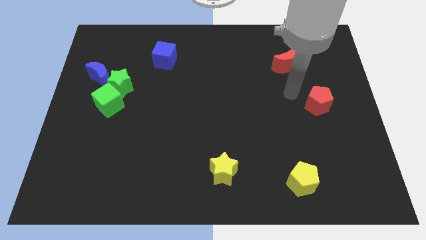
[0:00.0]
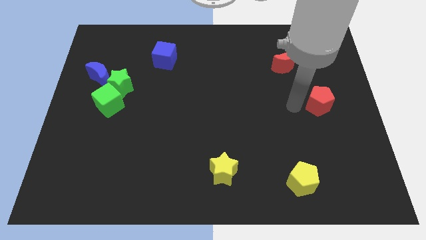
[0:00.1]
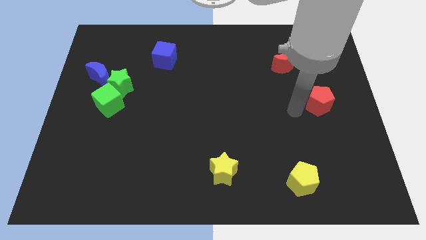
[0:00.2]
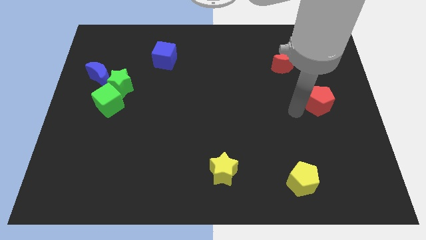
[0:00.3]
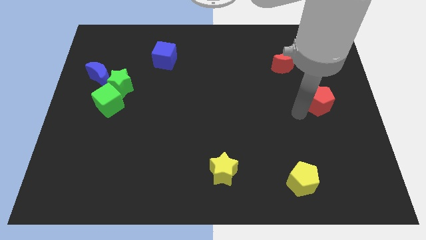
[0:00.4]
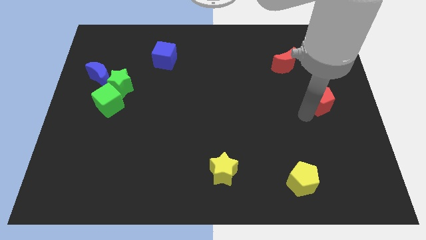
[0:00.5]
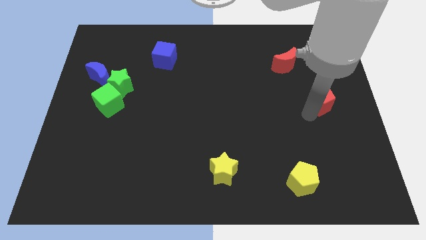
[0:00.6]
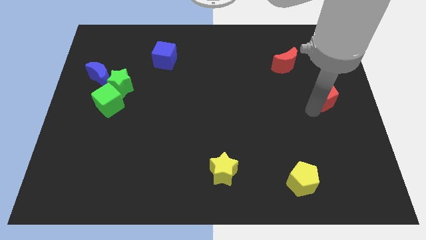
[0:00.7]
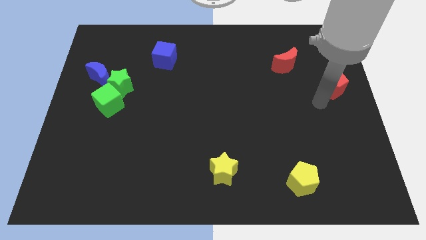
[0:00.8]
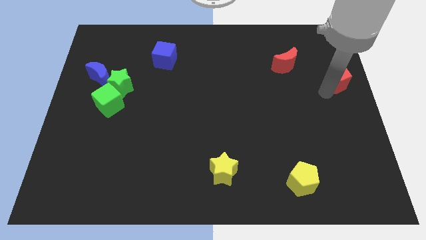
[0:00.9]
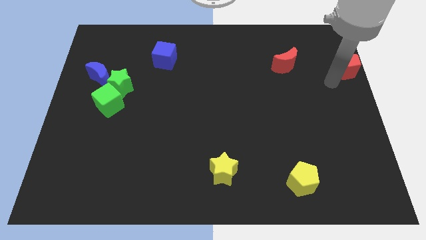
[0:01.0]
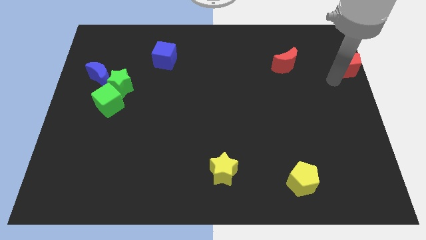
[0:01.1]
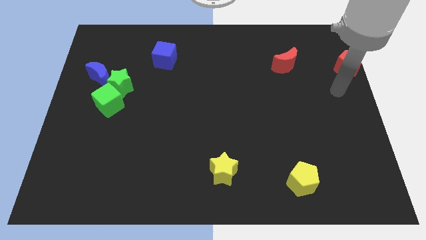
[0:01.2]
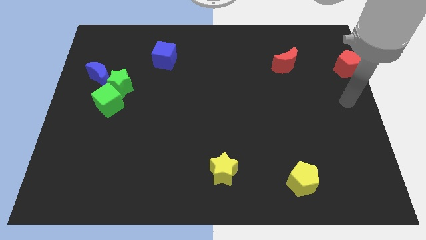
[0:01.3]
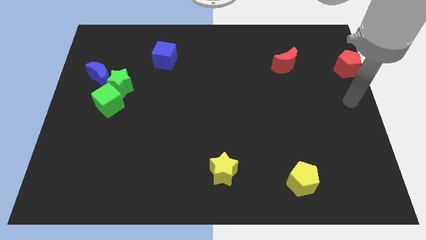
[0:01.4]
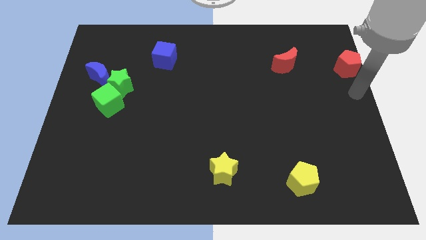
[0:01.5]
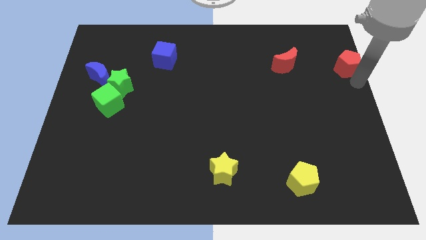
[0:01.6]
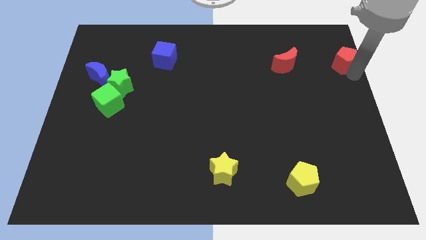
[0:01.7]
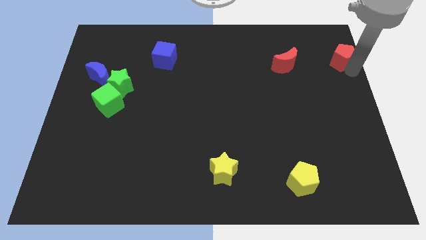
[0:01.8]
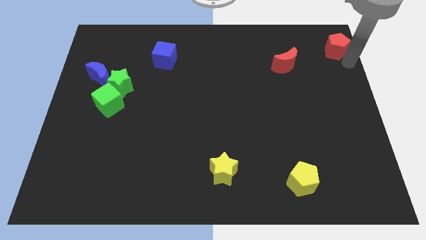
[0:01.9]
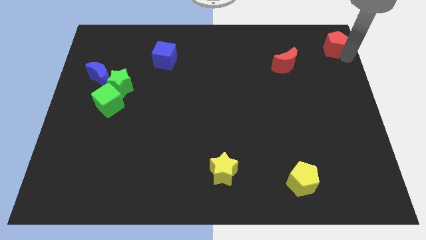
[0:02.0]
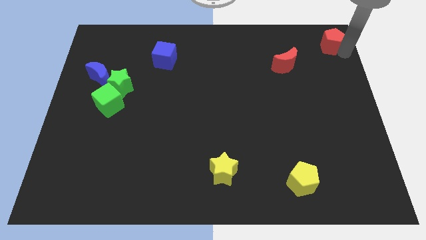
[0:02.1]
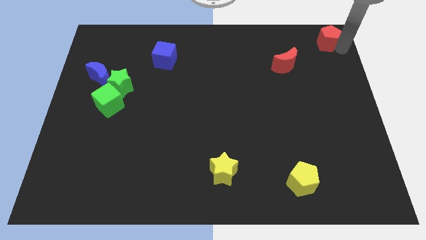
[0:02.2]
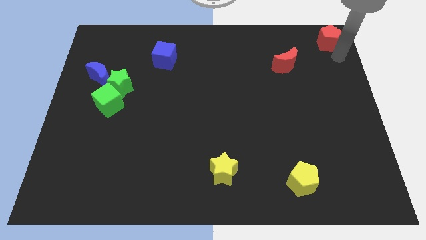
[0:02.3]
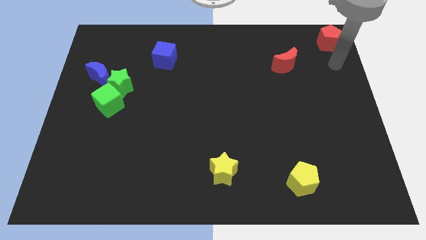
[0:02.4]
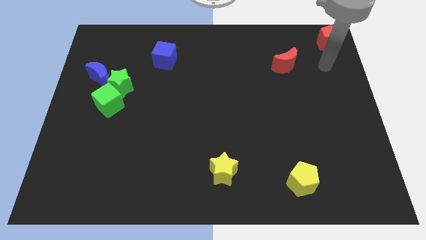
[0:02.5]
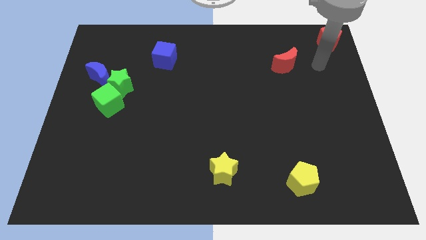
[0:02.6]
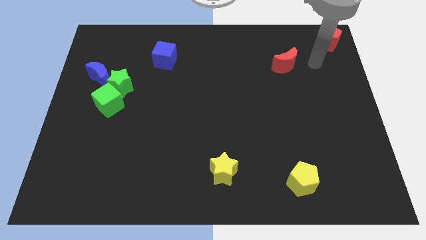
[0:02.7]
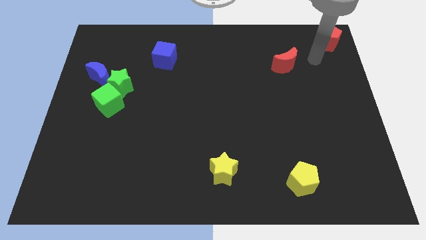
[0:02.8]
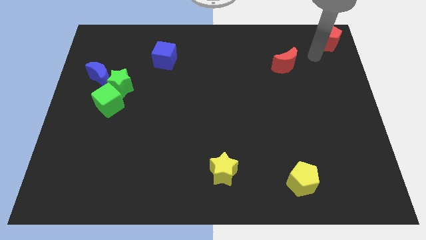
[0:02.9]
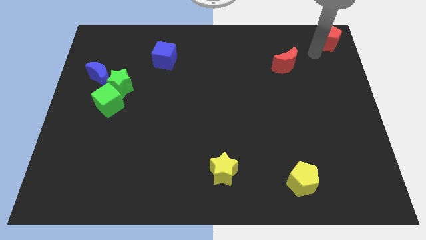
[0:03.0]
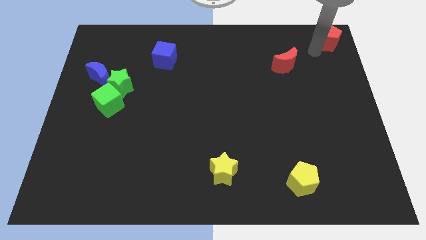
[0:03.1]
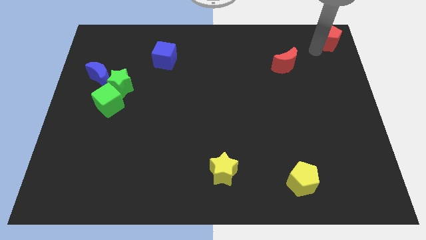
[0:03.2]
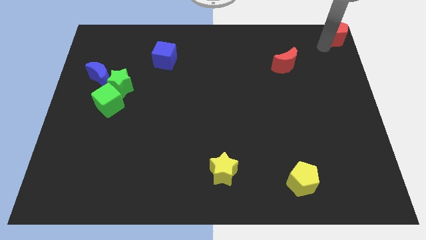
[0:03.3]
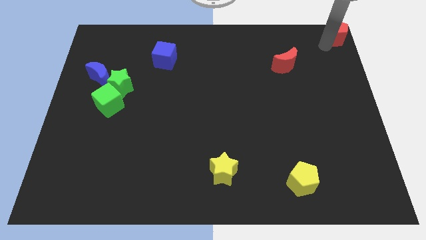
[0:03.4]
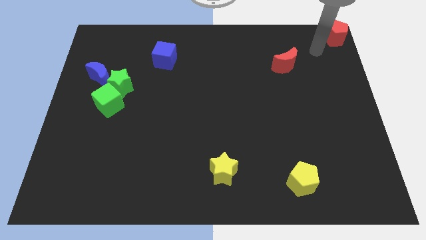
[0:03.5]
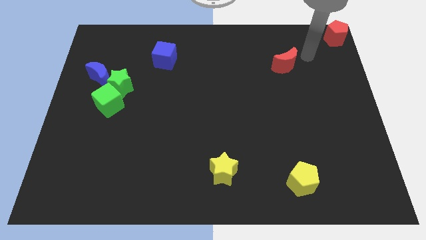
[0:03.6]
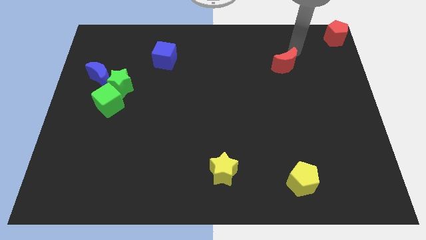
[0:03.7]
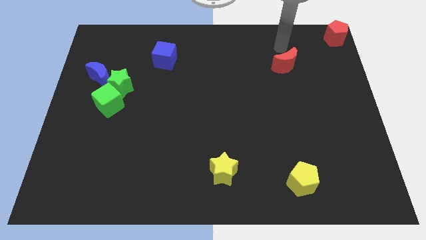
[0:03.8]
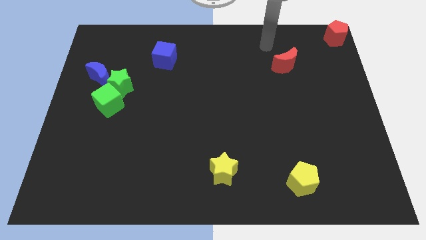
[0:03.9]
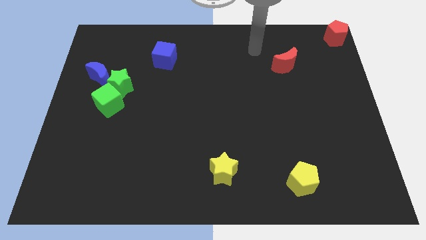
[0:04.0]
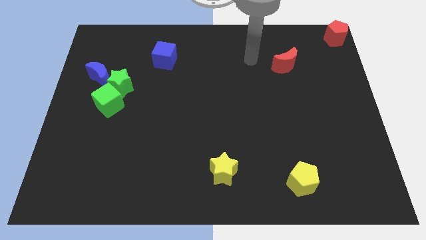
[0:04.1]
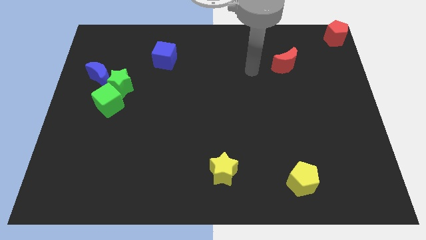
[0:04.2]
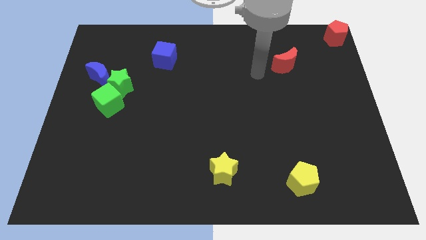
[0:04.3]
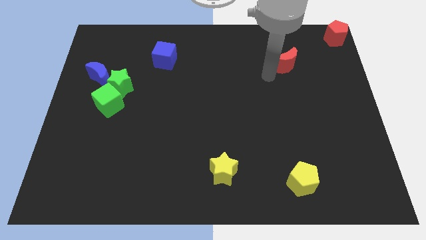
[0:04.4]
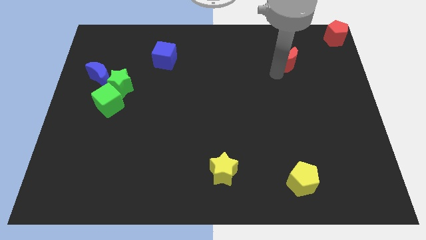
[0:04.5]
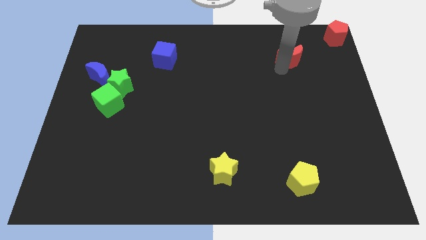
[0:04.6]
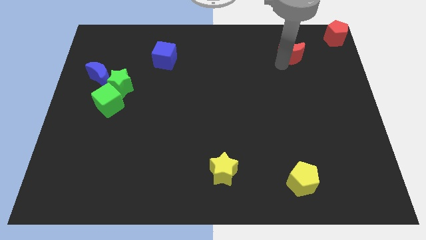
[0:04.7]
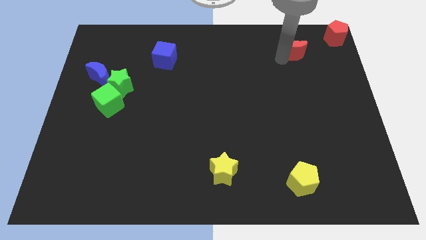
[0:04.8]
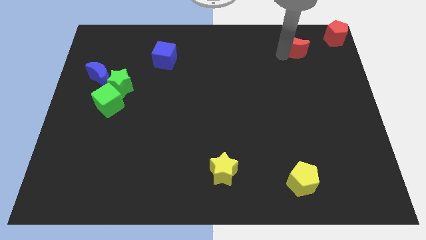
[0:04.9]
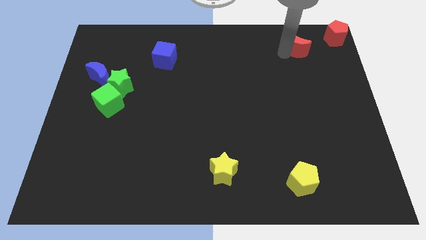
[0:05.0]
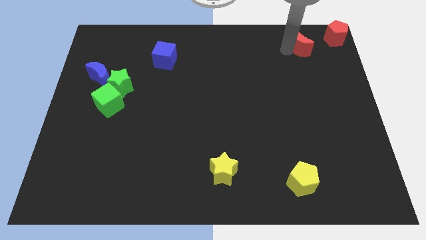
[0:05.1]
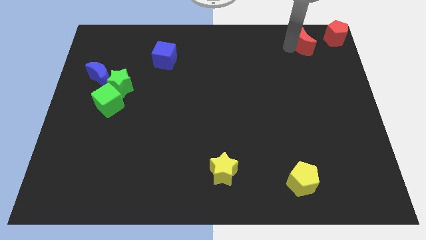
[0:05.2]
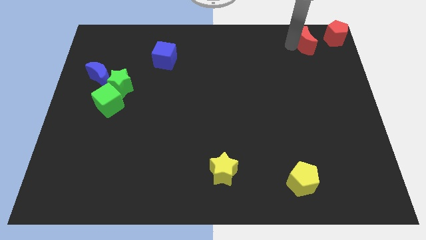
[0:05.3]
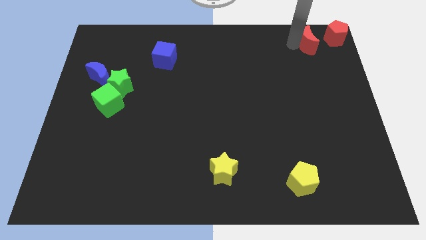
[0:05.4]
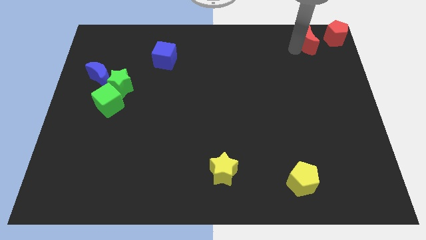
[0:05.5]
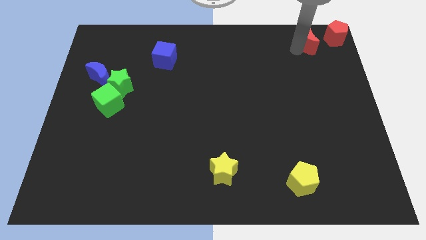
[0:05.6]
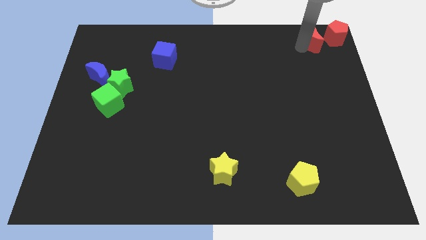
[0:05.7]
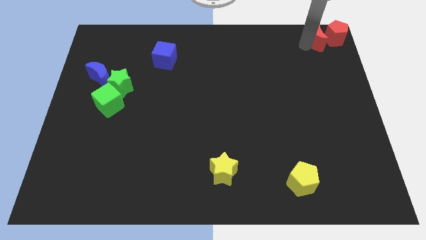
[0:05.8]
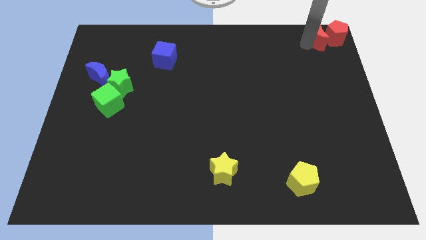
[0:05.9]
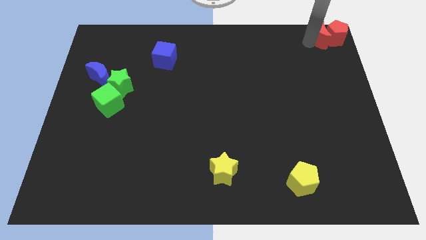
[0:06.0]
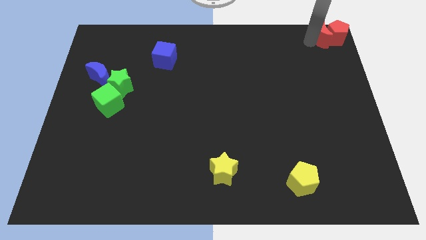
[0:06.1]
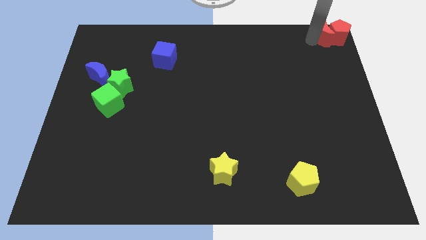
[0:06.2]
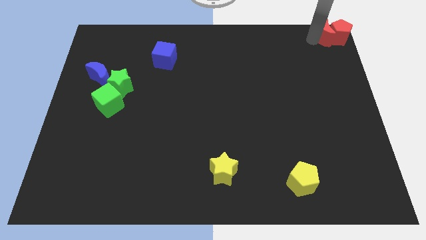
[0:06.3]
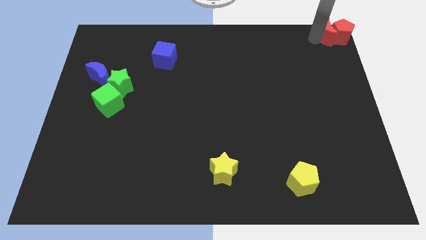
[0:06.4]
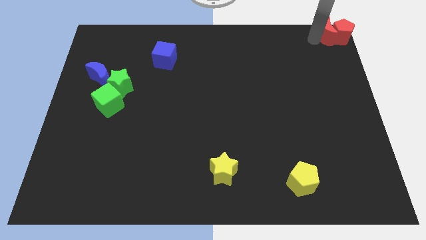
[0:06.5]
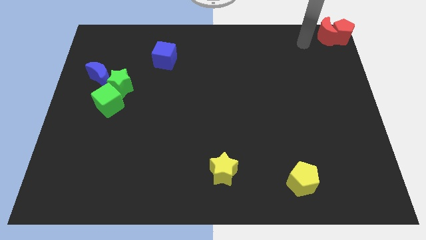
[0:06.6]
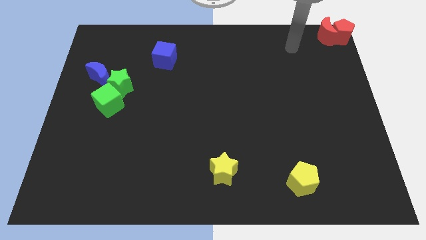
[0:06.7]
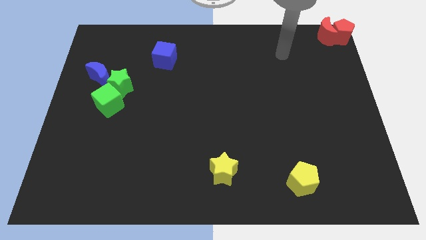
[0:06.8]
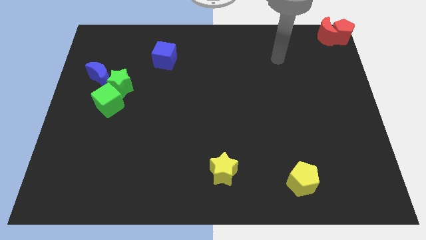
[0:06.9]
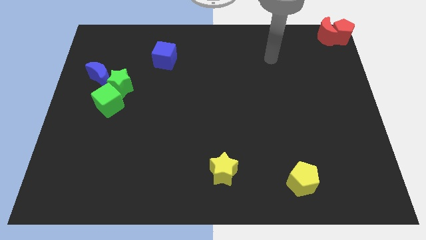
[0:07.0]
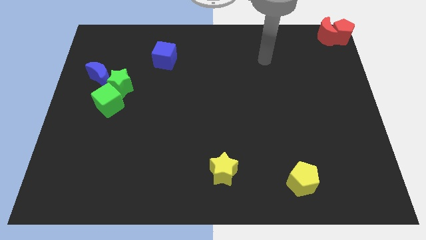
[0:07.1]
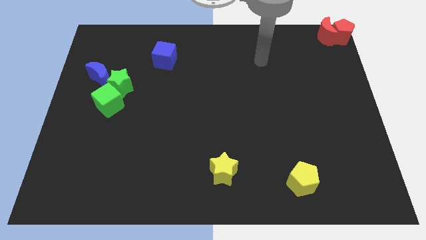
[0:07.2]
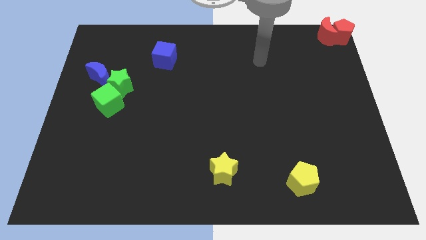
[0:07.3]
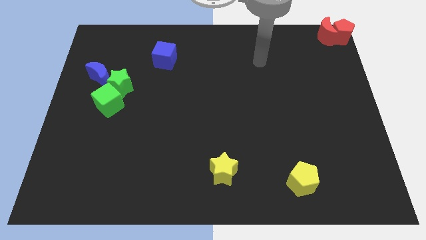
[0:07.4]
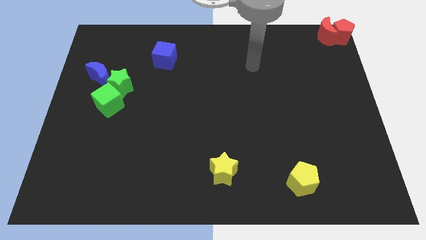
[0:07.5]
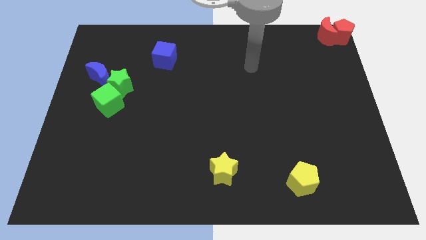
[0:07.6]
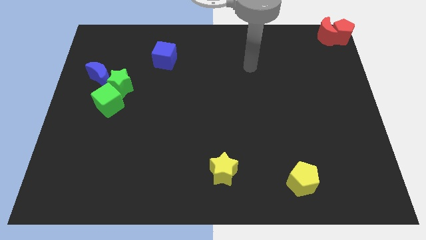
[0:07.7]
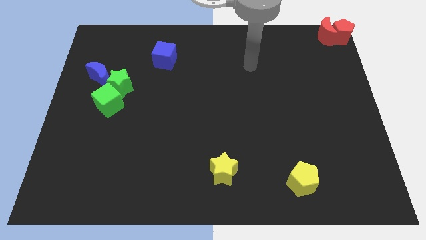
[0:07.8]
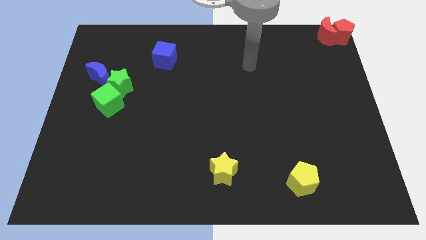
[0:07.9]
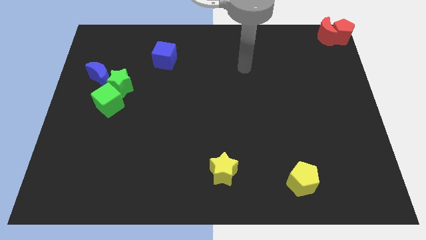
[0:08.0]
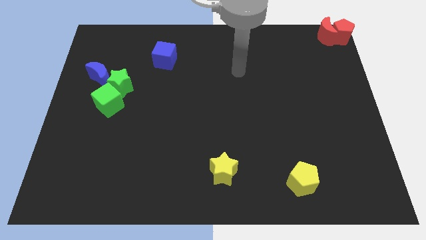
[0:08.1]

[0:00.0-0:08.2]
push the red moon into the red pentagon

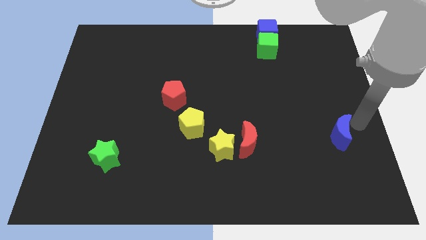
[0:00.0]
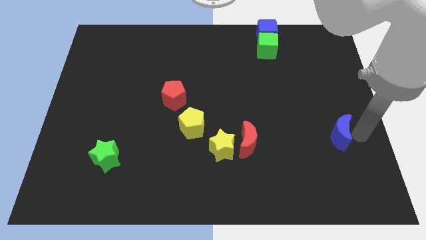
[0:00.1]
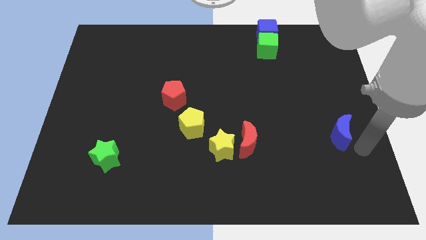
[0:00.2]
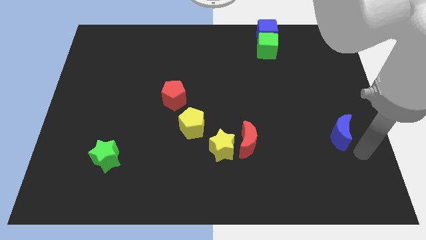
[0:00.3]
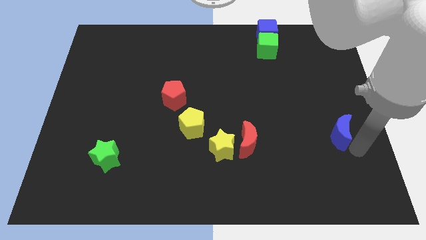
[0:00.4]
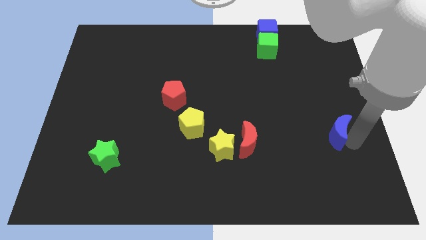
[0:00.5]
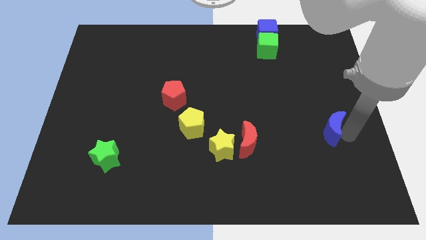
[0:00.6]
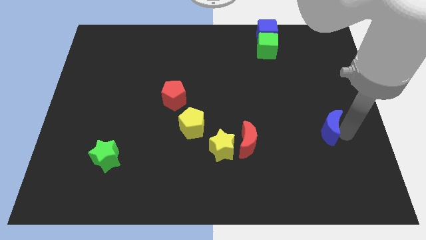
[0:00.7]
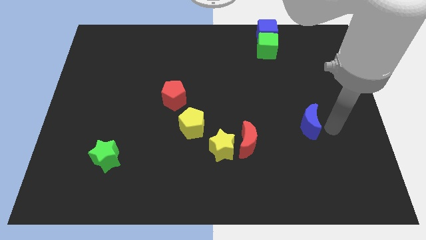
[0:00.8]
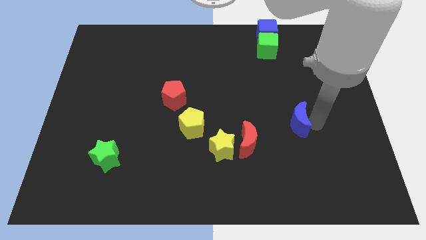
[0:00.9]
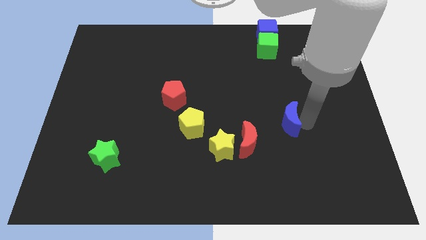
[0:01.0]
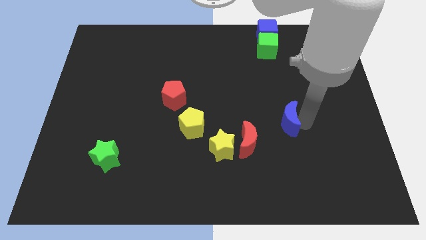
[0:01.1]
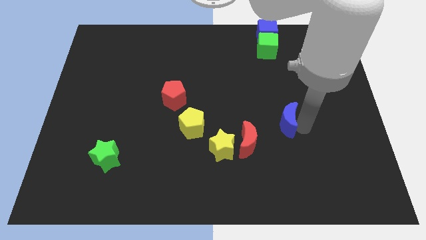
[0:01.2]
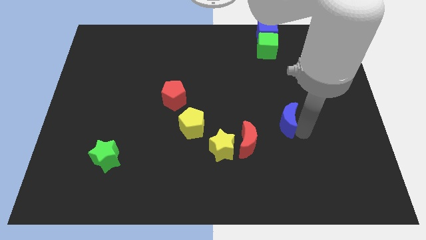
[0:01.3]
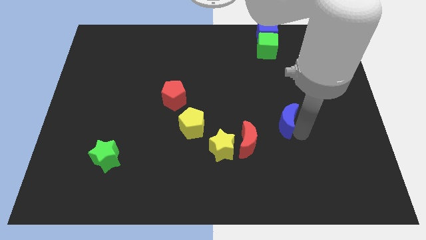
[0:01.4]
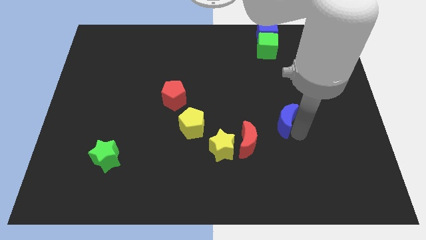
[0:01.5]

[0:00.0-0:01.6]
push the blue moon to the right top of the red moon
